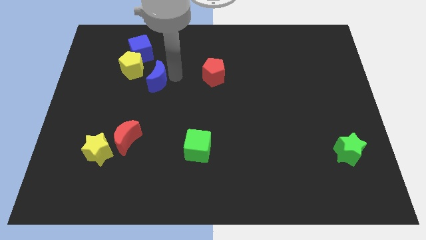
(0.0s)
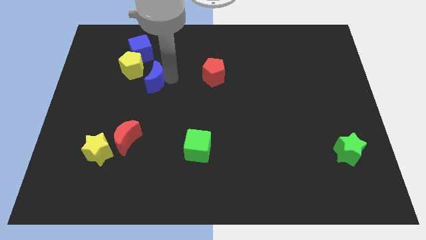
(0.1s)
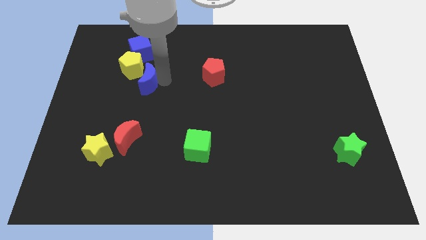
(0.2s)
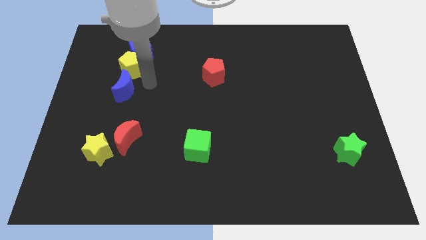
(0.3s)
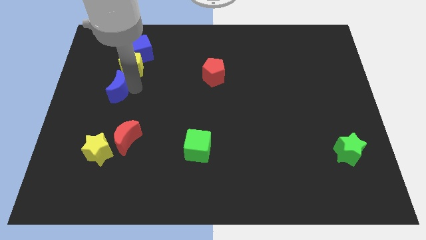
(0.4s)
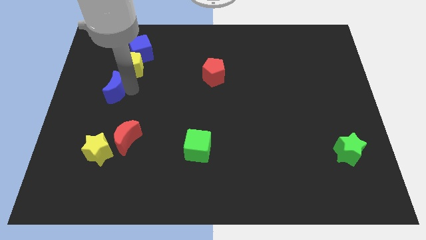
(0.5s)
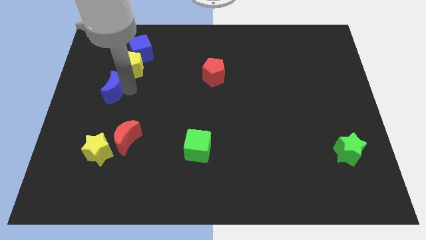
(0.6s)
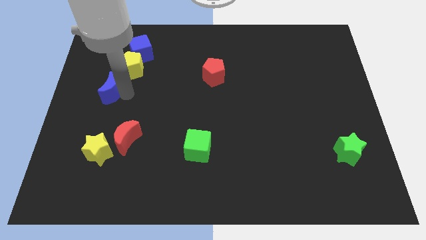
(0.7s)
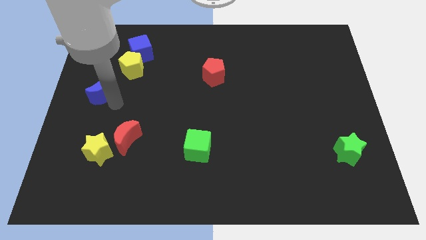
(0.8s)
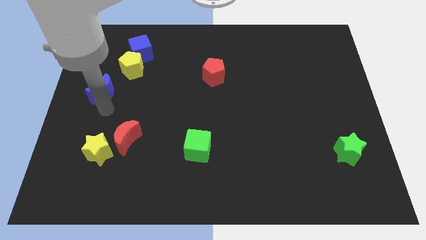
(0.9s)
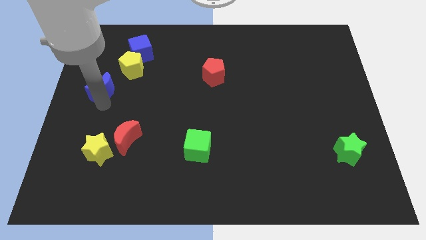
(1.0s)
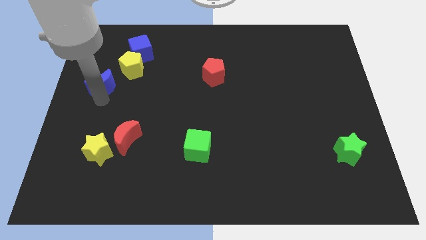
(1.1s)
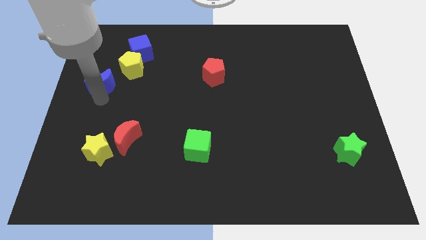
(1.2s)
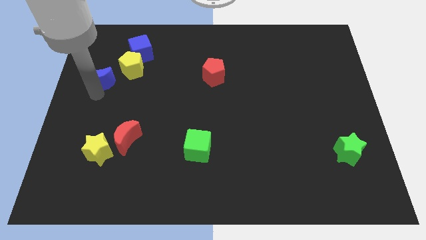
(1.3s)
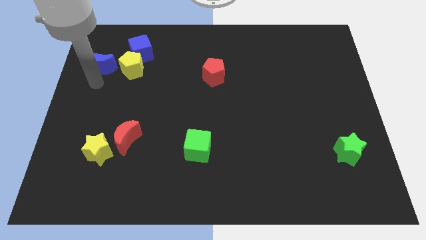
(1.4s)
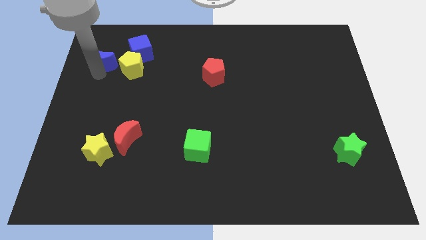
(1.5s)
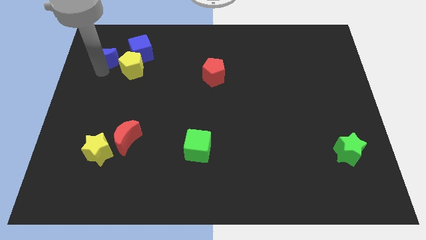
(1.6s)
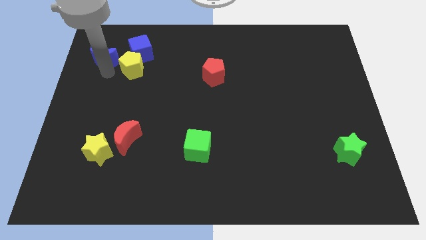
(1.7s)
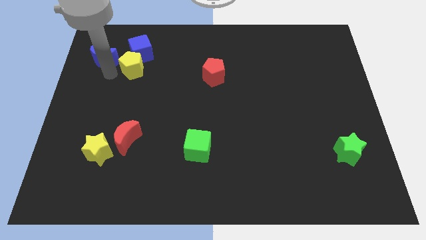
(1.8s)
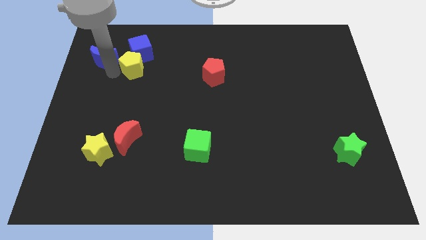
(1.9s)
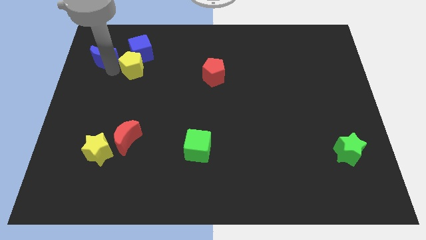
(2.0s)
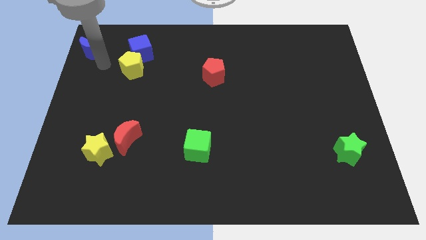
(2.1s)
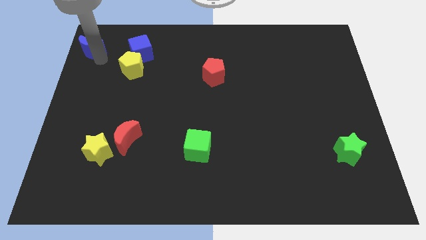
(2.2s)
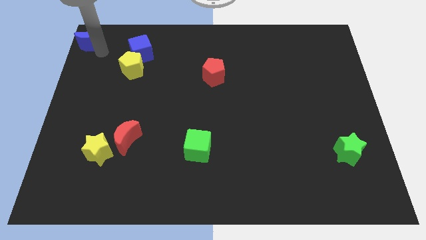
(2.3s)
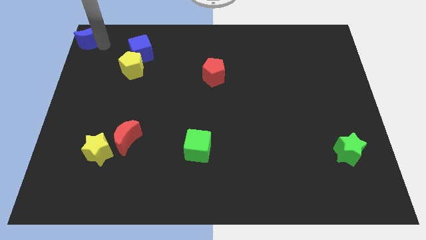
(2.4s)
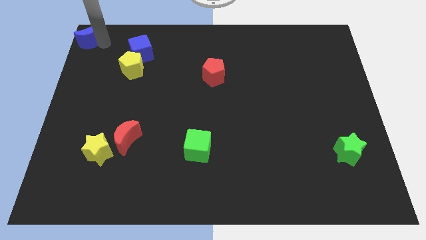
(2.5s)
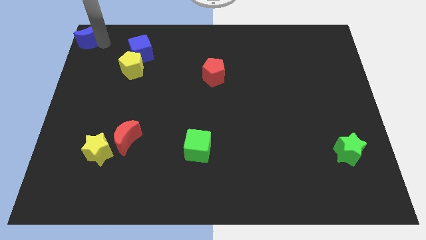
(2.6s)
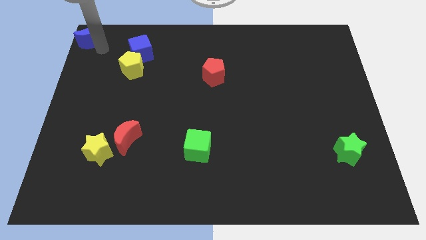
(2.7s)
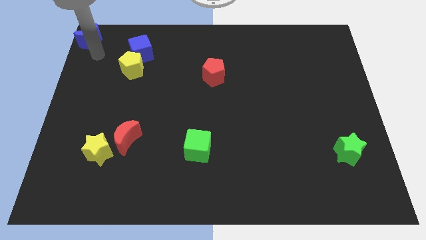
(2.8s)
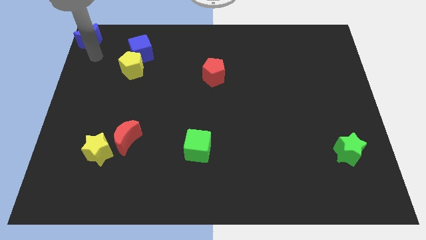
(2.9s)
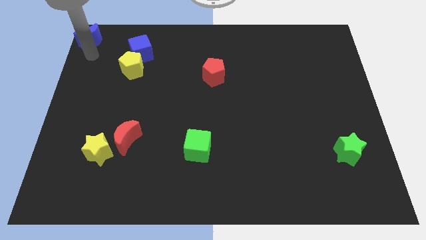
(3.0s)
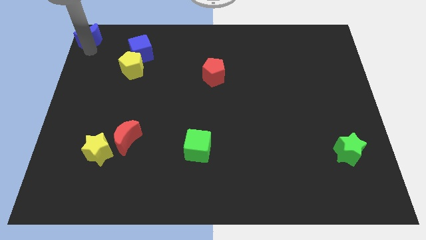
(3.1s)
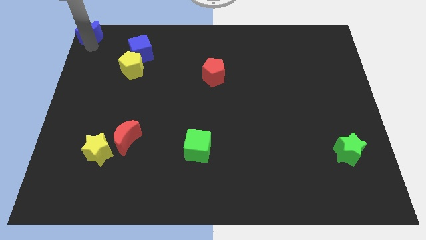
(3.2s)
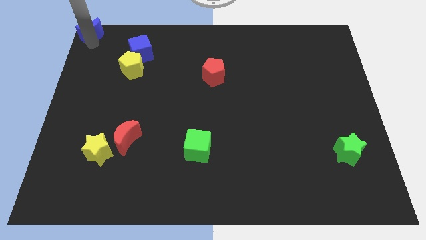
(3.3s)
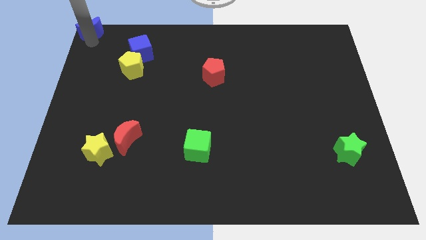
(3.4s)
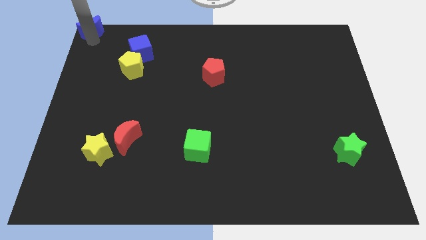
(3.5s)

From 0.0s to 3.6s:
place blue crescent towards top left corner

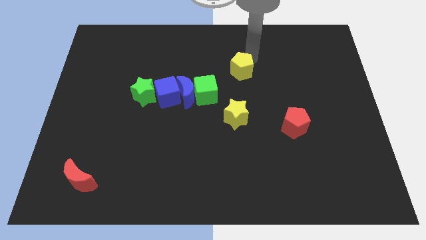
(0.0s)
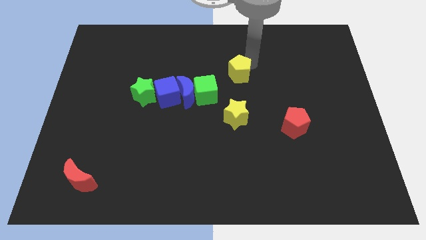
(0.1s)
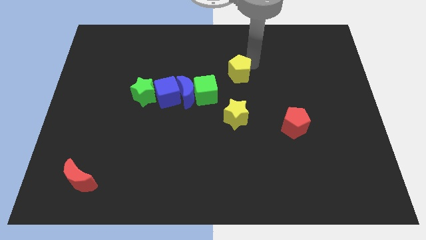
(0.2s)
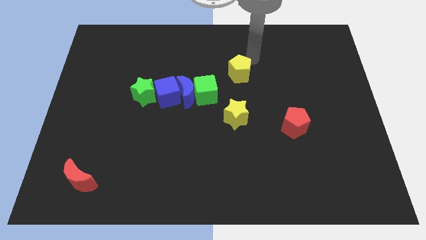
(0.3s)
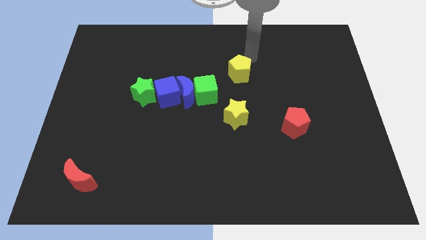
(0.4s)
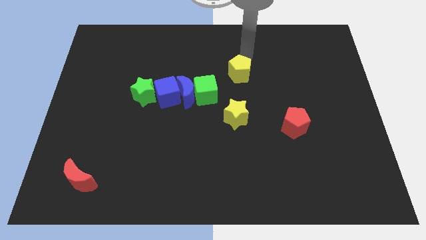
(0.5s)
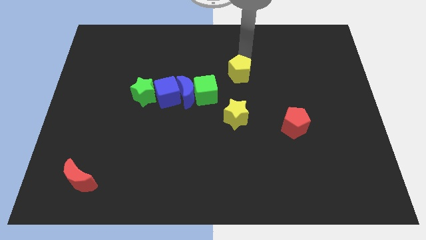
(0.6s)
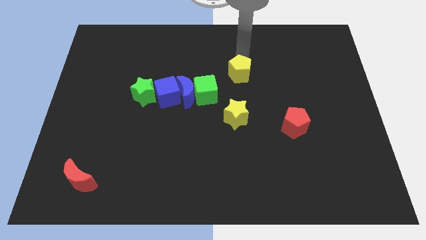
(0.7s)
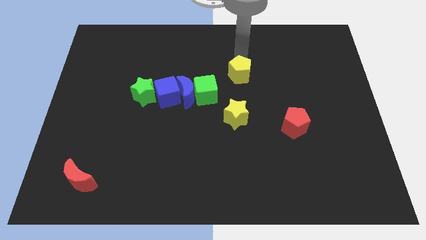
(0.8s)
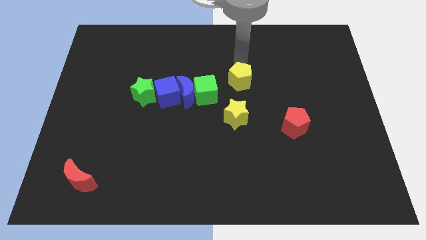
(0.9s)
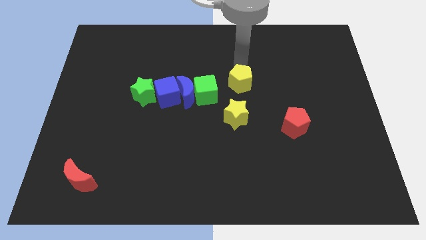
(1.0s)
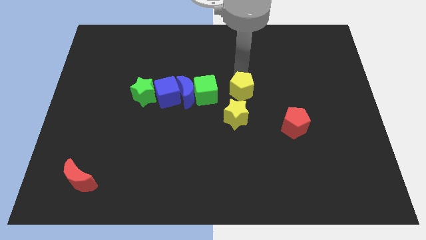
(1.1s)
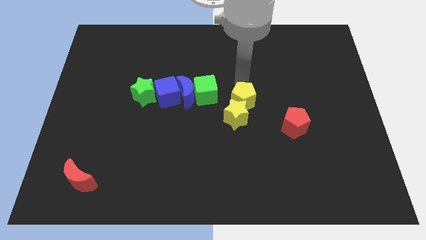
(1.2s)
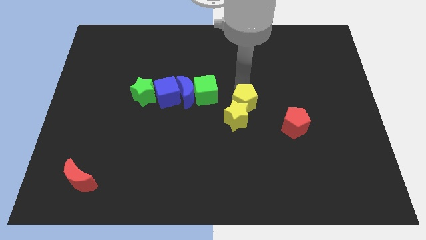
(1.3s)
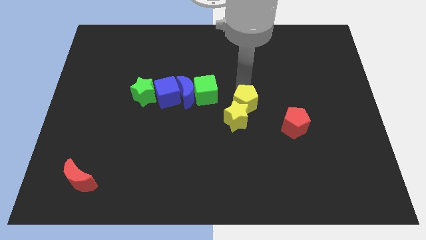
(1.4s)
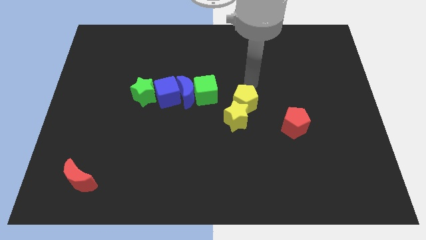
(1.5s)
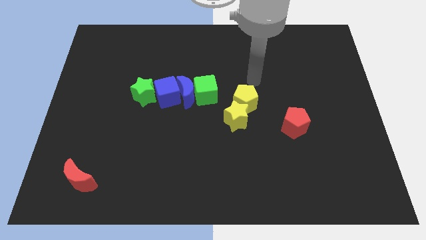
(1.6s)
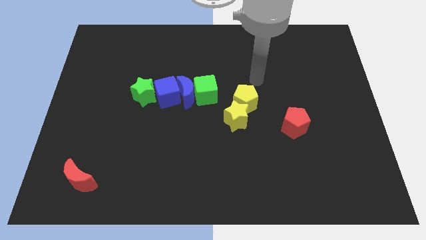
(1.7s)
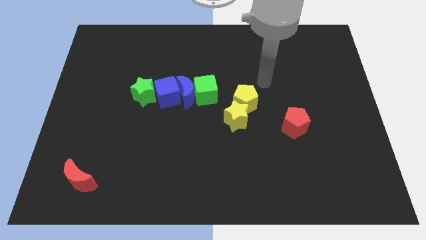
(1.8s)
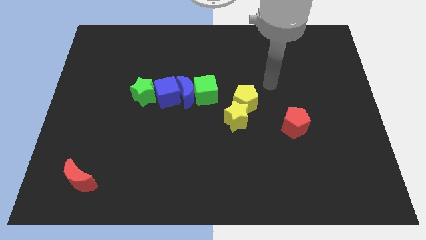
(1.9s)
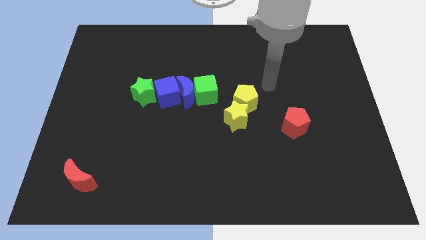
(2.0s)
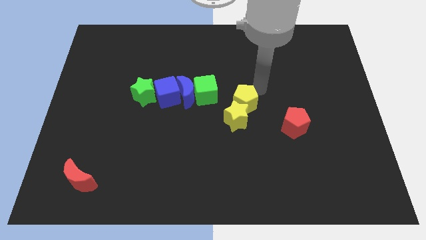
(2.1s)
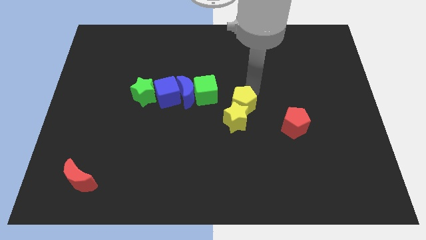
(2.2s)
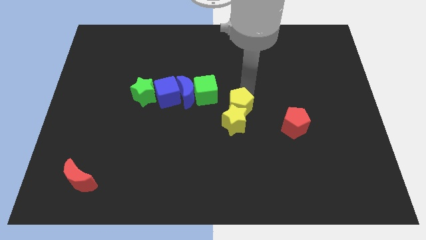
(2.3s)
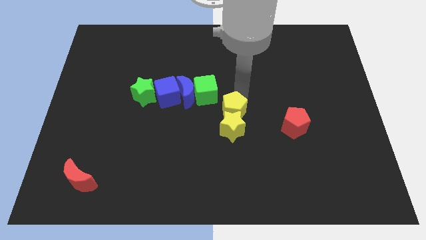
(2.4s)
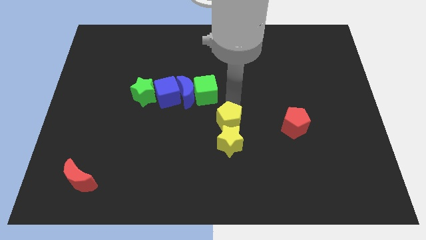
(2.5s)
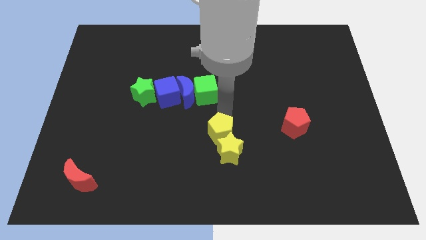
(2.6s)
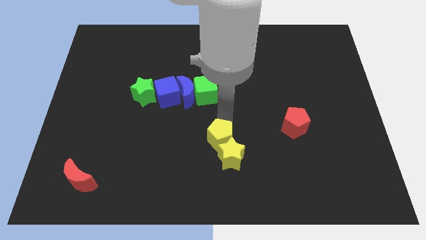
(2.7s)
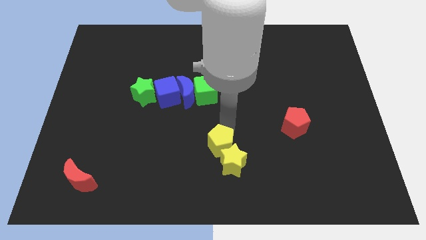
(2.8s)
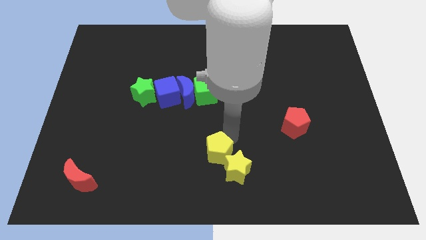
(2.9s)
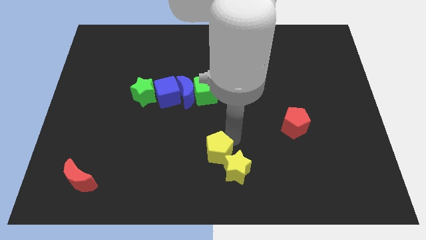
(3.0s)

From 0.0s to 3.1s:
move the yellow blocks to the bottom center

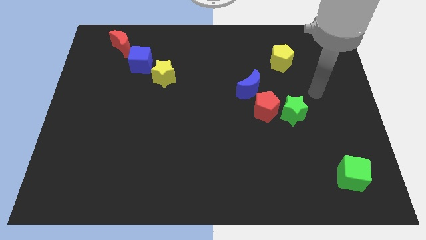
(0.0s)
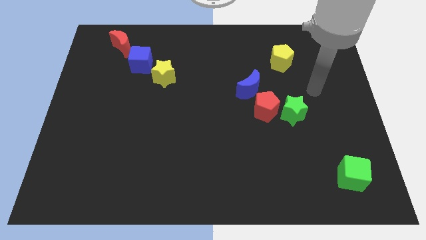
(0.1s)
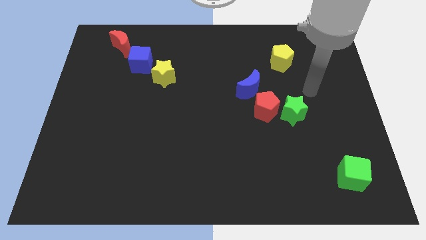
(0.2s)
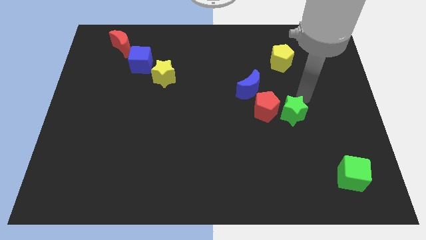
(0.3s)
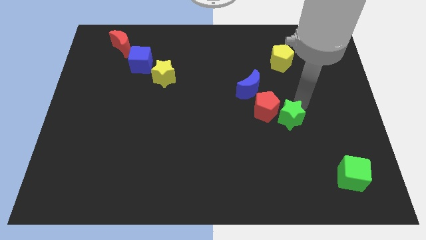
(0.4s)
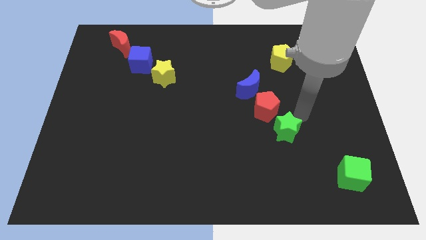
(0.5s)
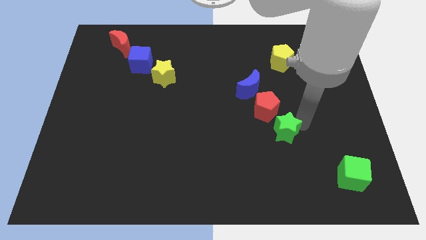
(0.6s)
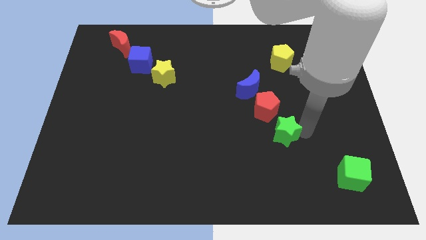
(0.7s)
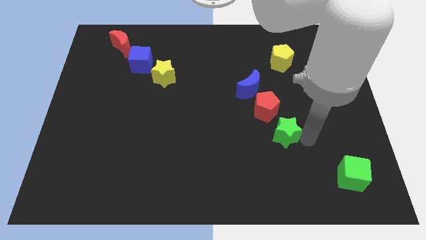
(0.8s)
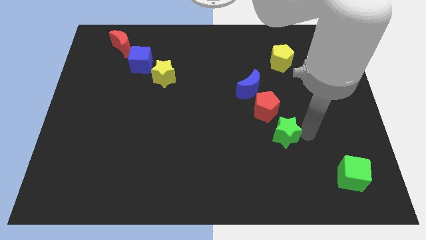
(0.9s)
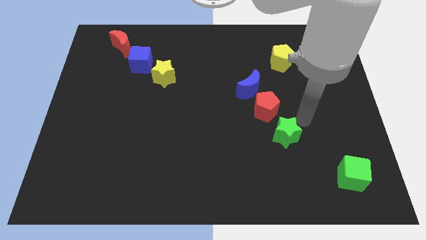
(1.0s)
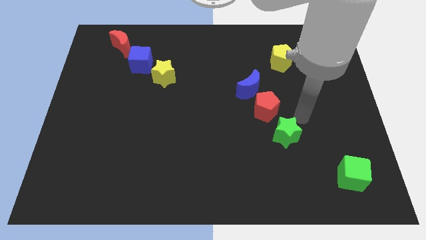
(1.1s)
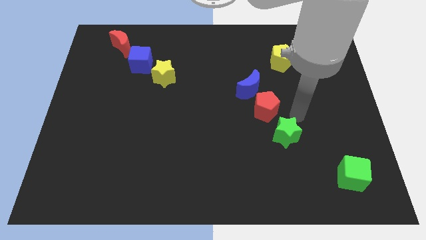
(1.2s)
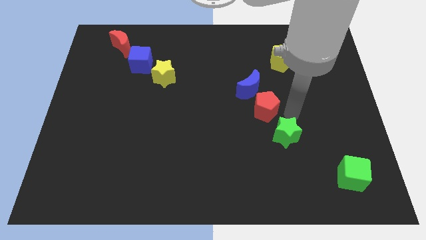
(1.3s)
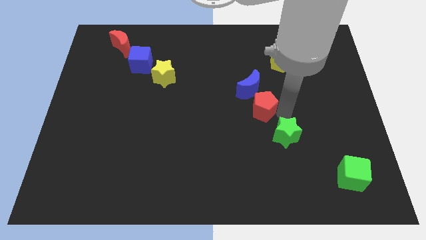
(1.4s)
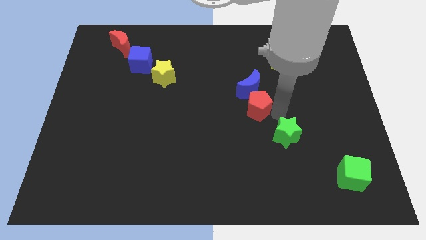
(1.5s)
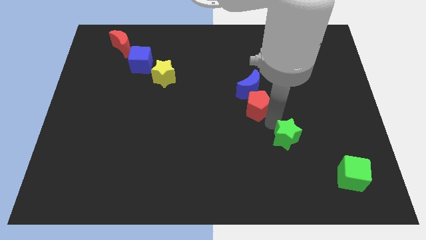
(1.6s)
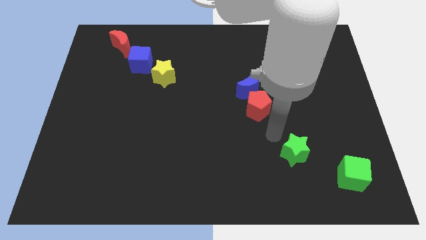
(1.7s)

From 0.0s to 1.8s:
push the green star diagonal to the green cube

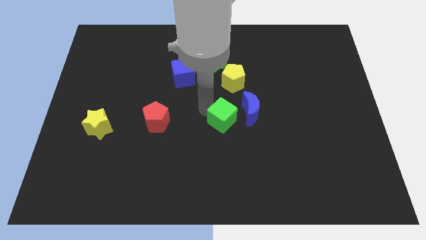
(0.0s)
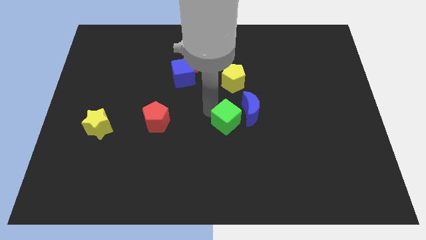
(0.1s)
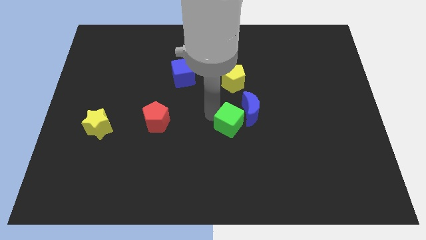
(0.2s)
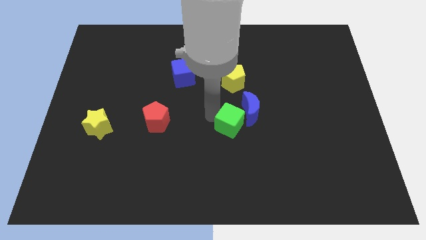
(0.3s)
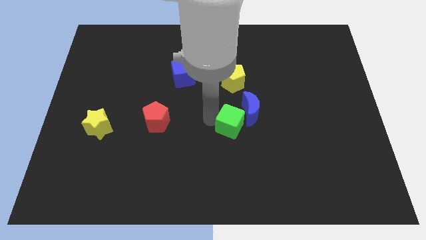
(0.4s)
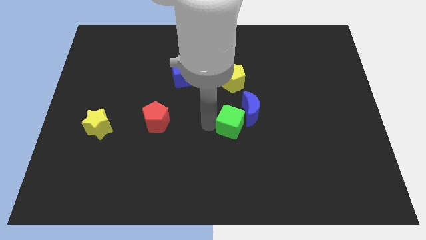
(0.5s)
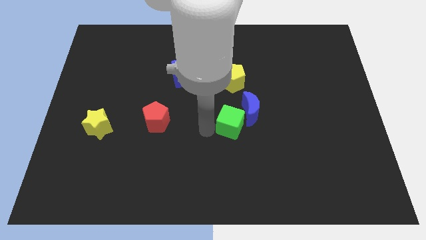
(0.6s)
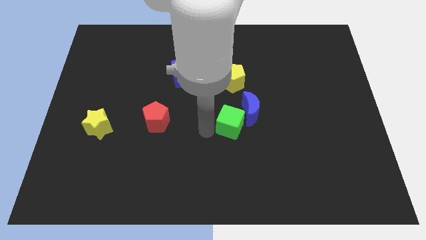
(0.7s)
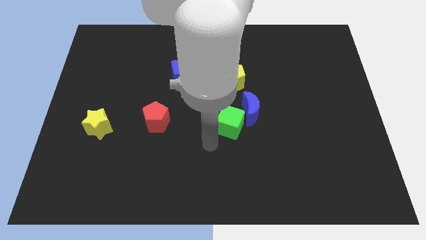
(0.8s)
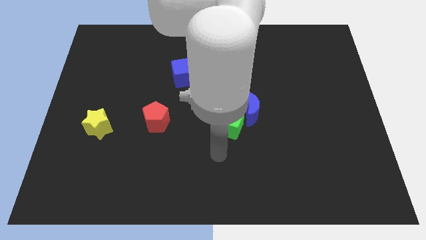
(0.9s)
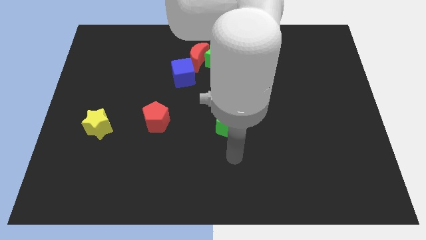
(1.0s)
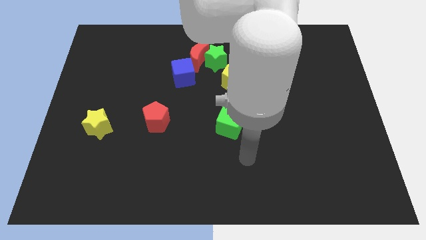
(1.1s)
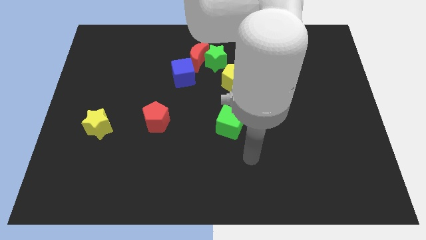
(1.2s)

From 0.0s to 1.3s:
slide green cube towards blue crescent
